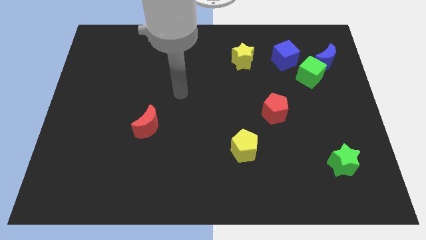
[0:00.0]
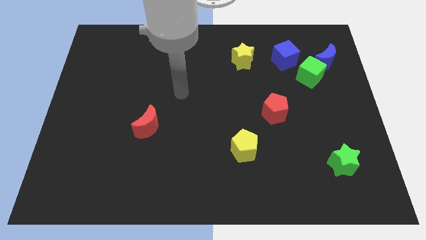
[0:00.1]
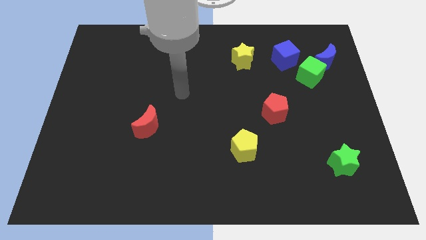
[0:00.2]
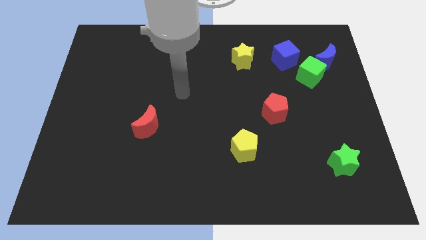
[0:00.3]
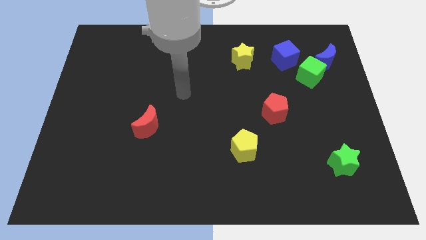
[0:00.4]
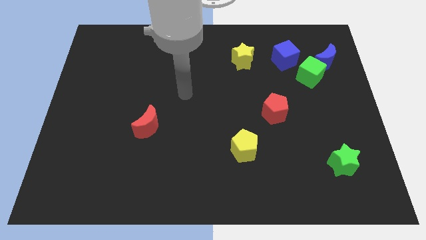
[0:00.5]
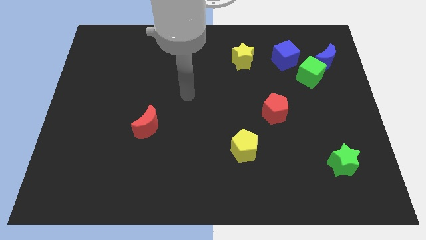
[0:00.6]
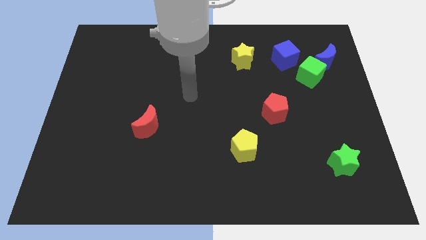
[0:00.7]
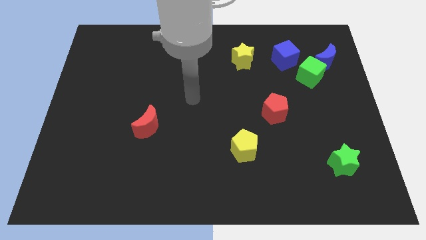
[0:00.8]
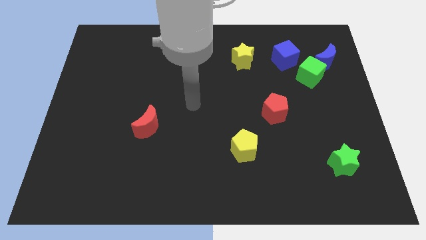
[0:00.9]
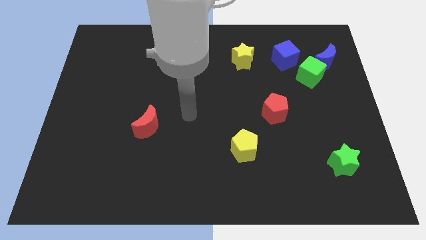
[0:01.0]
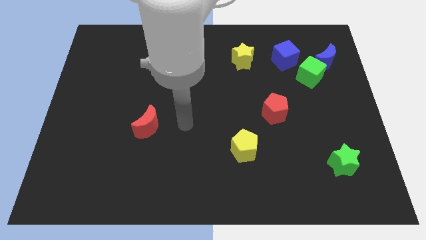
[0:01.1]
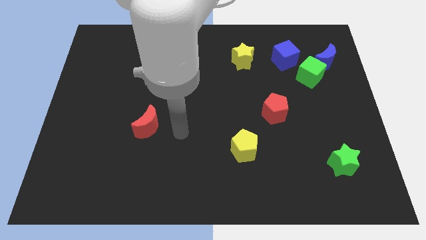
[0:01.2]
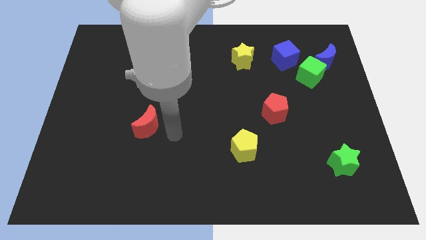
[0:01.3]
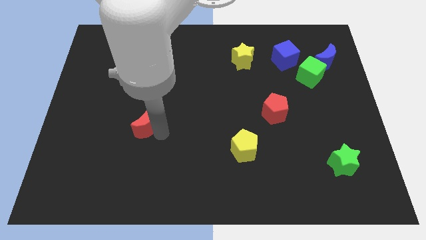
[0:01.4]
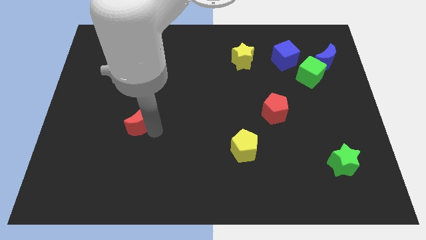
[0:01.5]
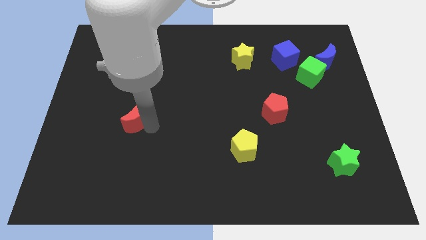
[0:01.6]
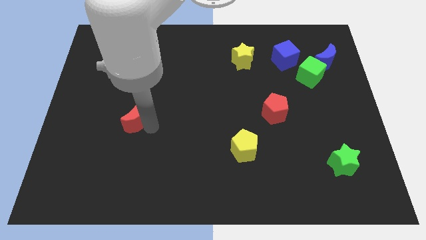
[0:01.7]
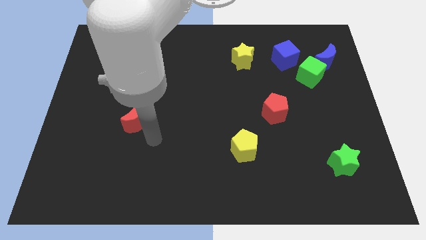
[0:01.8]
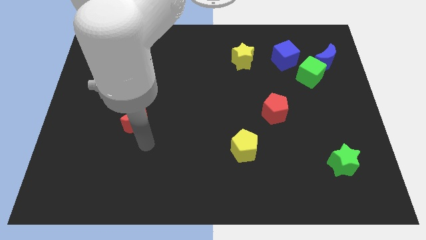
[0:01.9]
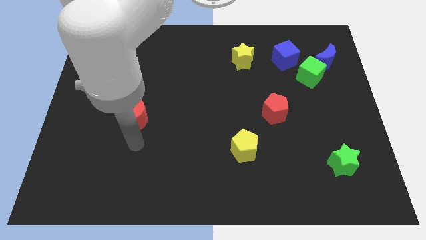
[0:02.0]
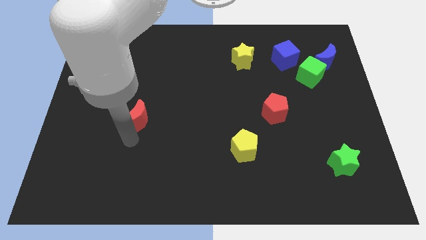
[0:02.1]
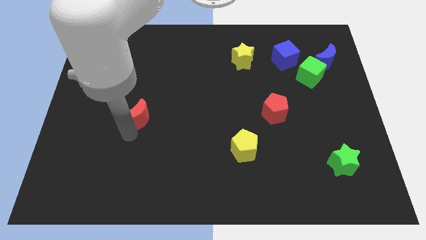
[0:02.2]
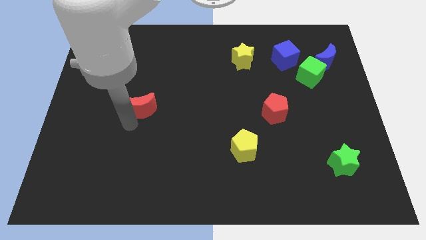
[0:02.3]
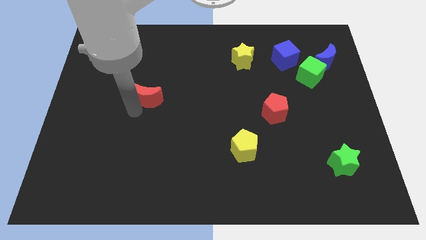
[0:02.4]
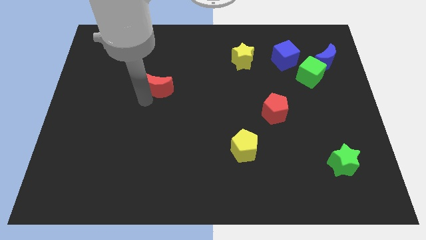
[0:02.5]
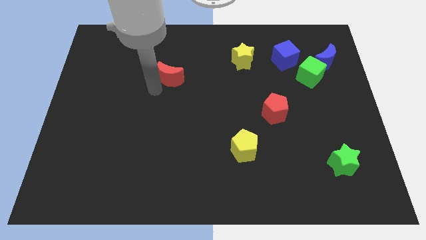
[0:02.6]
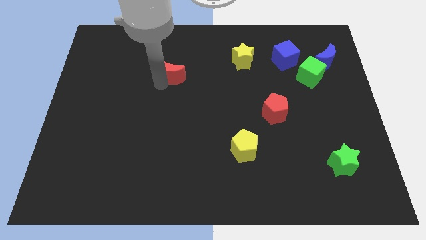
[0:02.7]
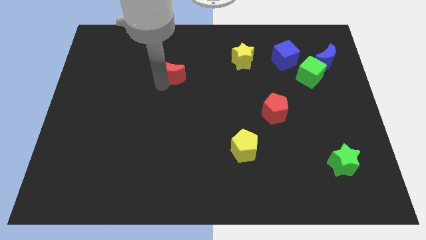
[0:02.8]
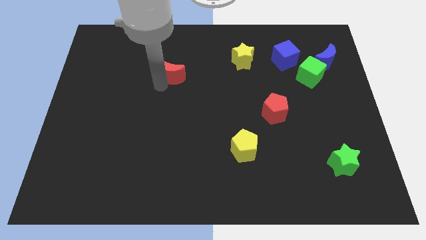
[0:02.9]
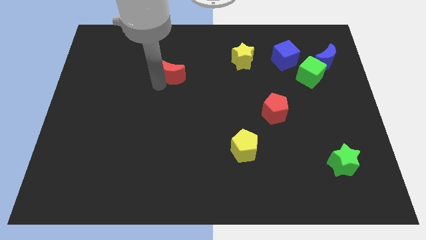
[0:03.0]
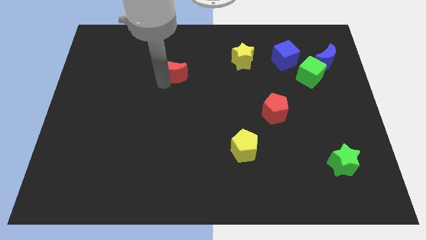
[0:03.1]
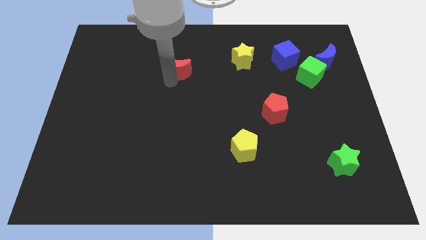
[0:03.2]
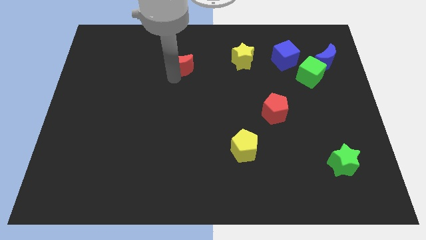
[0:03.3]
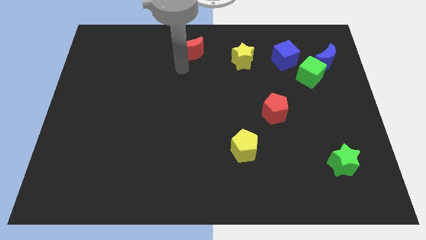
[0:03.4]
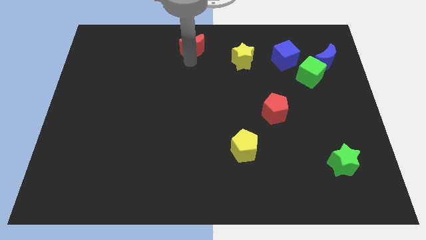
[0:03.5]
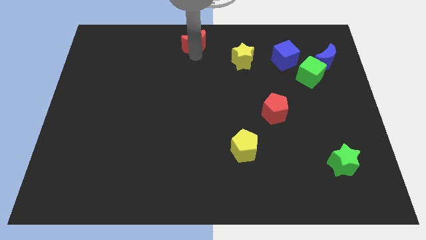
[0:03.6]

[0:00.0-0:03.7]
push the red moon to top center of the board

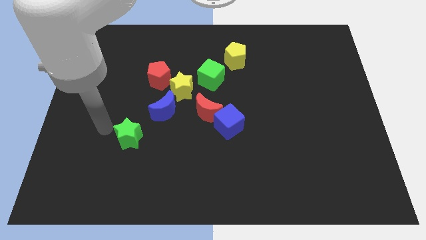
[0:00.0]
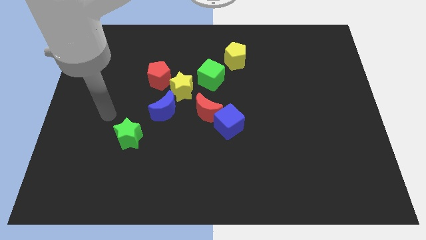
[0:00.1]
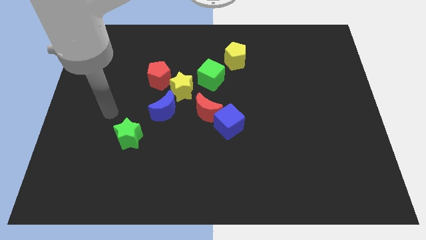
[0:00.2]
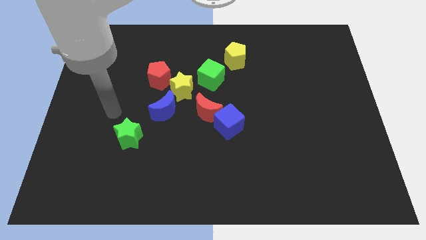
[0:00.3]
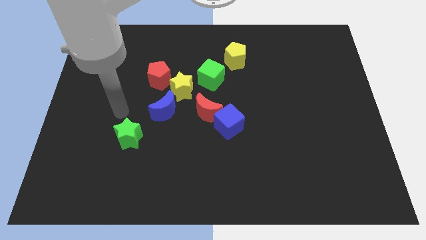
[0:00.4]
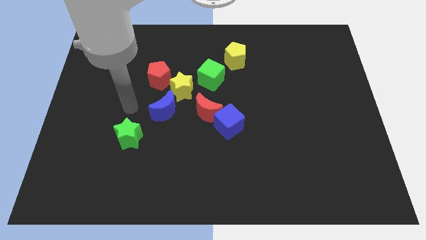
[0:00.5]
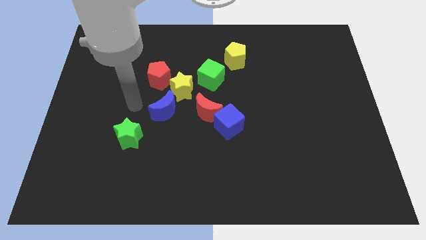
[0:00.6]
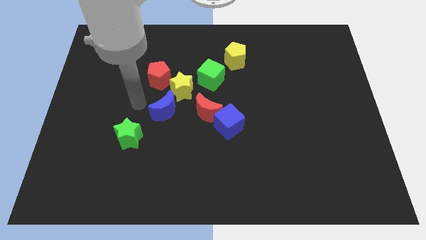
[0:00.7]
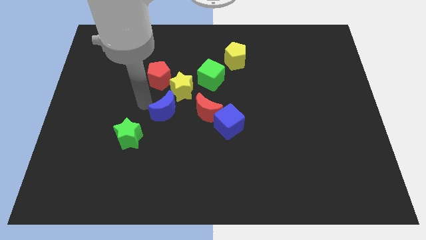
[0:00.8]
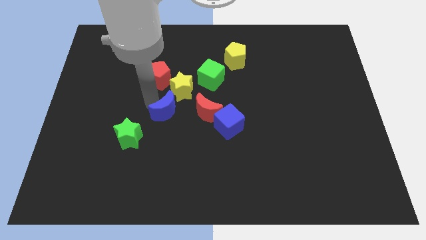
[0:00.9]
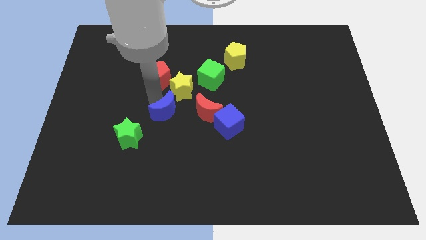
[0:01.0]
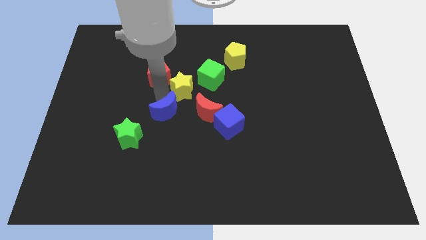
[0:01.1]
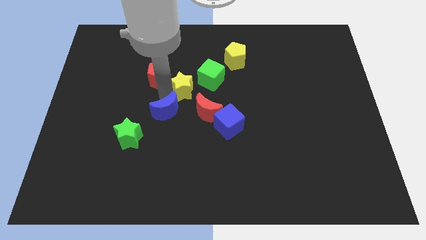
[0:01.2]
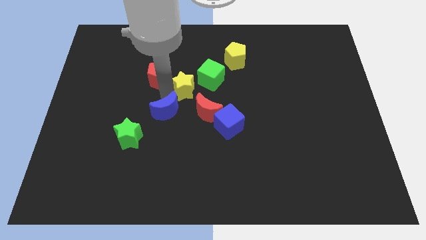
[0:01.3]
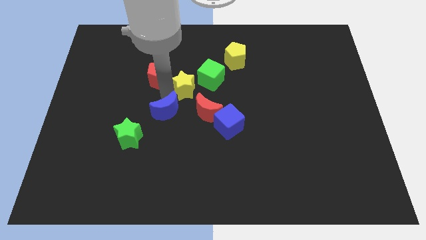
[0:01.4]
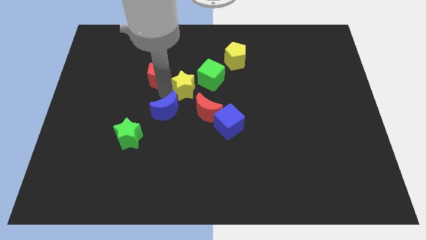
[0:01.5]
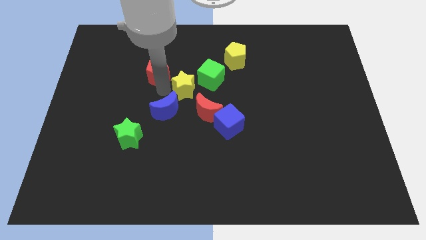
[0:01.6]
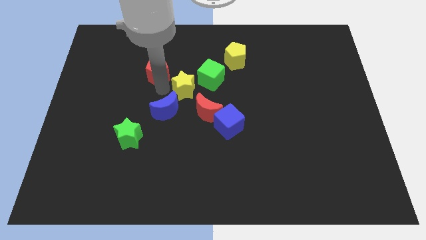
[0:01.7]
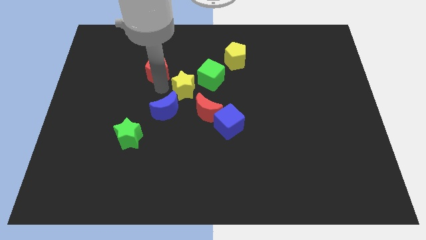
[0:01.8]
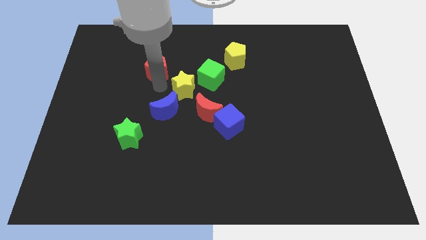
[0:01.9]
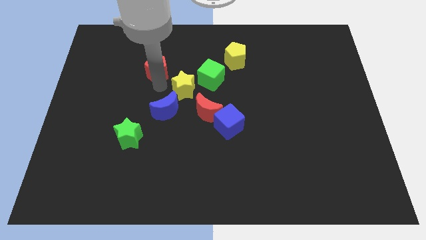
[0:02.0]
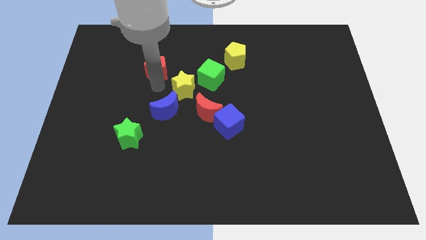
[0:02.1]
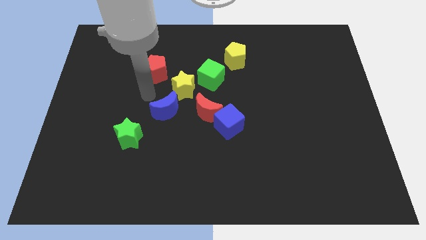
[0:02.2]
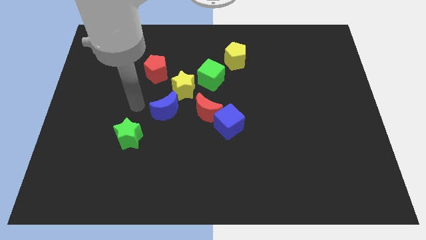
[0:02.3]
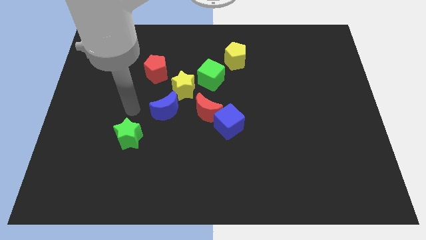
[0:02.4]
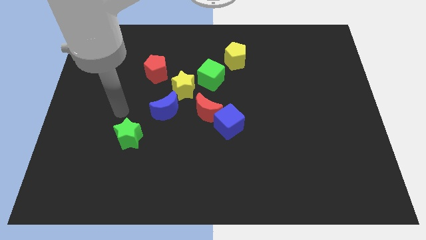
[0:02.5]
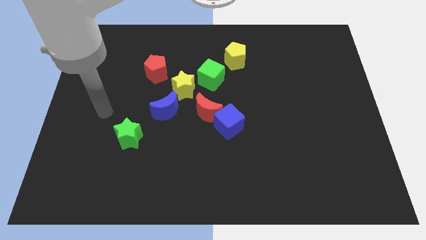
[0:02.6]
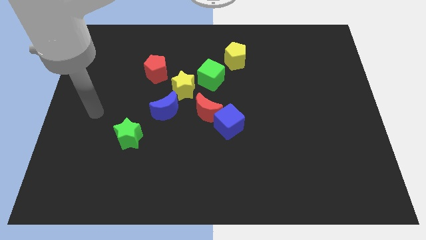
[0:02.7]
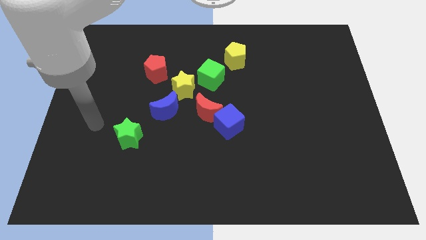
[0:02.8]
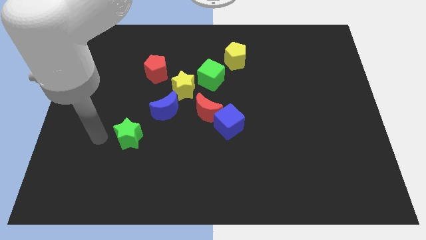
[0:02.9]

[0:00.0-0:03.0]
move the yellow star away from the red pentagon

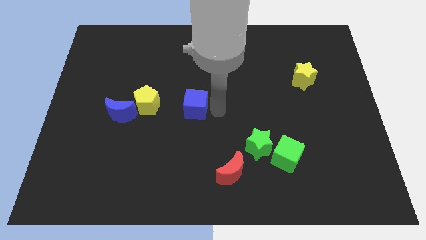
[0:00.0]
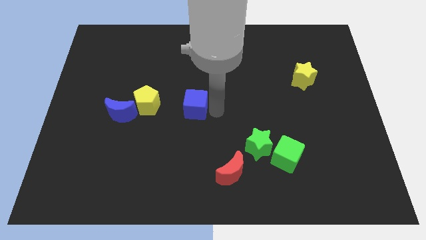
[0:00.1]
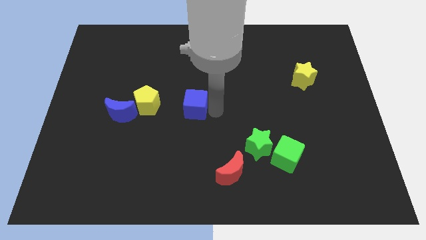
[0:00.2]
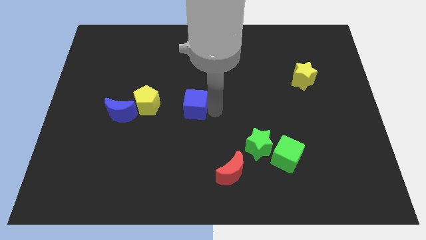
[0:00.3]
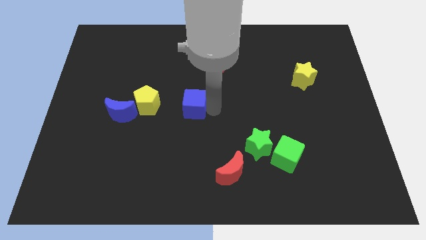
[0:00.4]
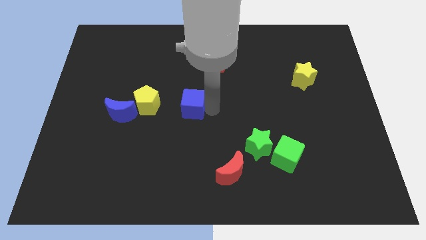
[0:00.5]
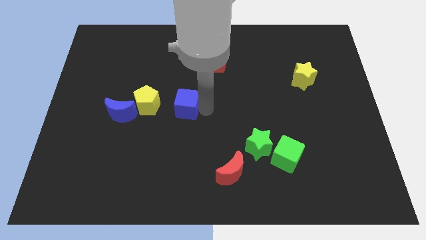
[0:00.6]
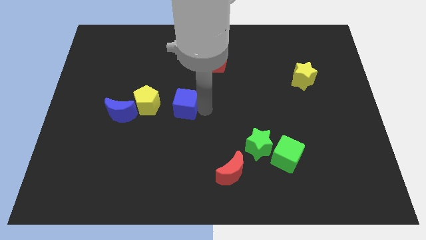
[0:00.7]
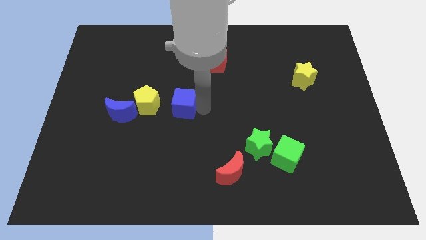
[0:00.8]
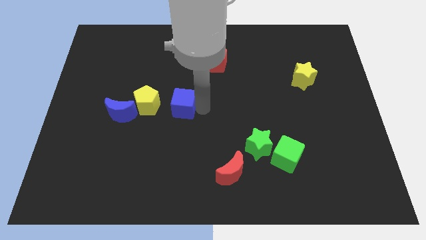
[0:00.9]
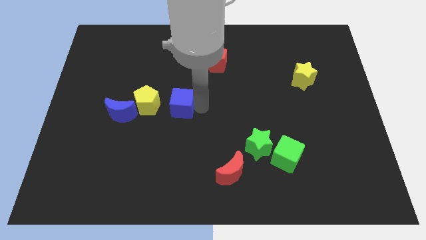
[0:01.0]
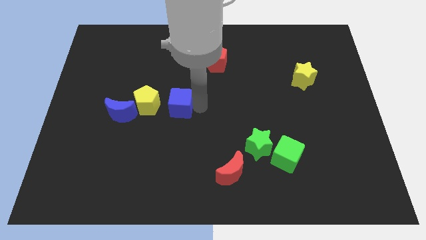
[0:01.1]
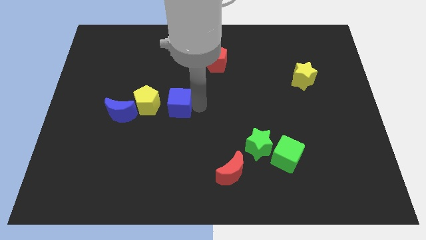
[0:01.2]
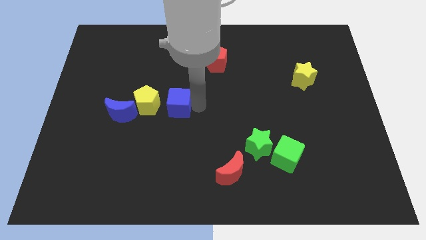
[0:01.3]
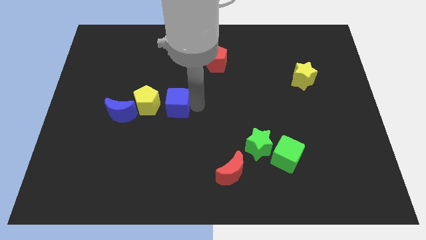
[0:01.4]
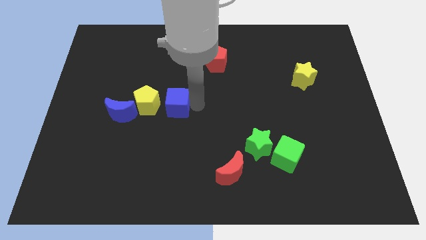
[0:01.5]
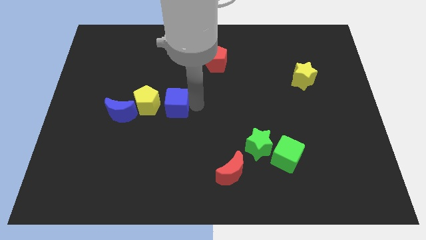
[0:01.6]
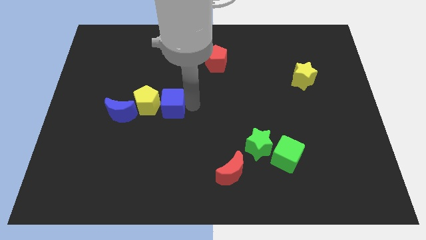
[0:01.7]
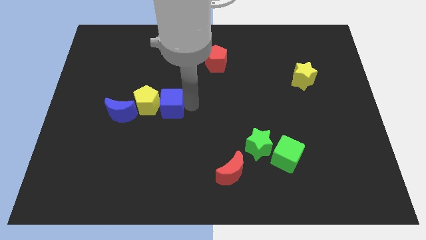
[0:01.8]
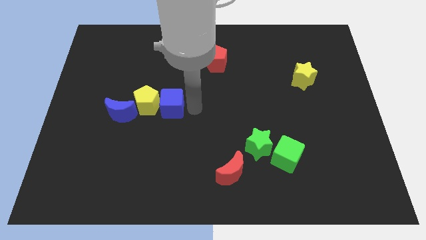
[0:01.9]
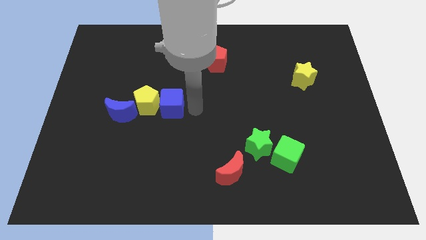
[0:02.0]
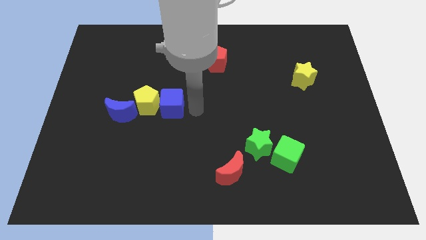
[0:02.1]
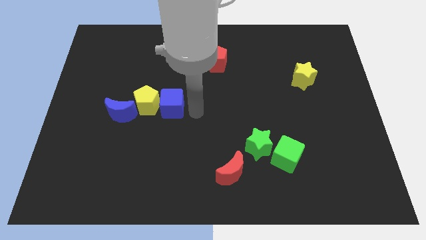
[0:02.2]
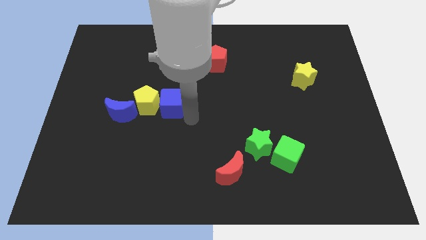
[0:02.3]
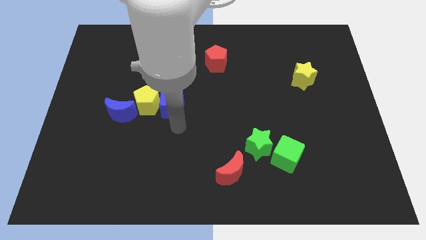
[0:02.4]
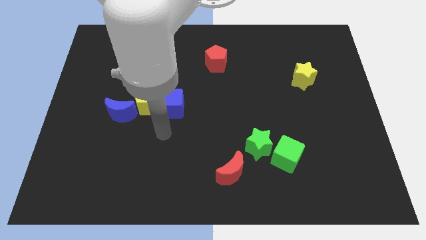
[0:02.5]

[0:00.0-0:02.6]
push the blue cube towards the yellow pentagon
